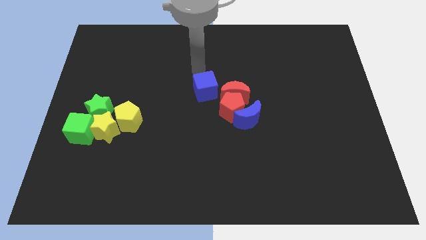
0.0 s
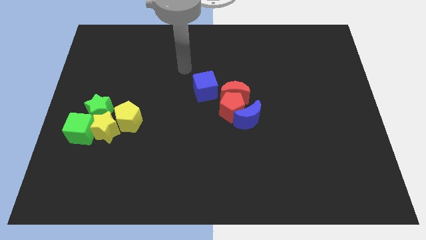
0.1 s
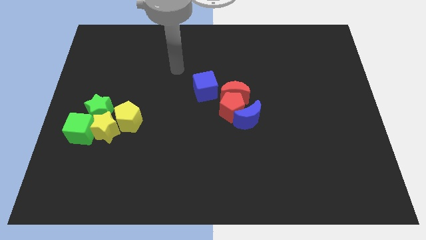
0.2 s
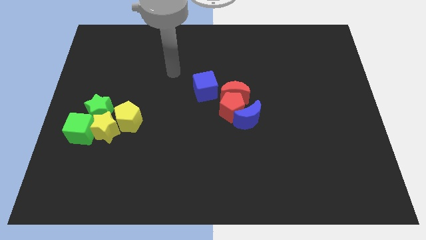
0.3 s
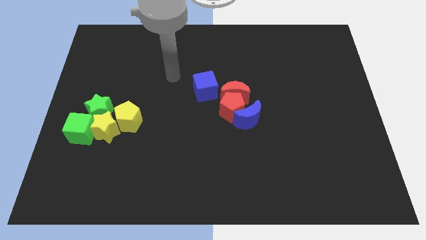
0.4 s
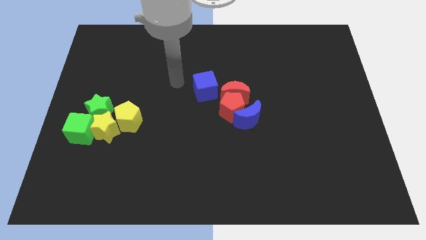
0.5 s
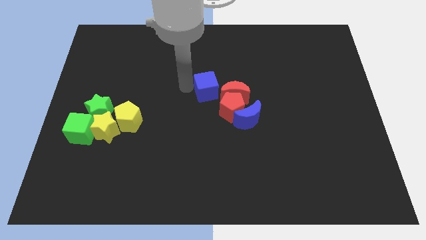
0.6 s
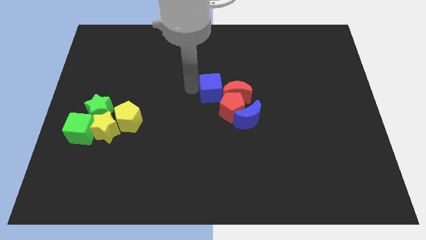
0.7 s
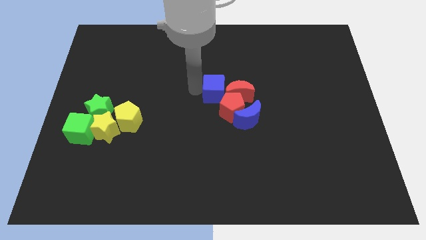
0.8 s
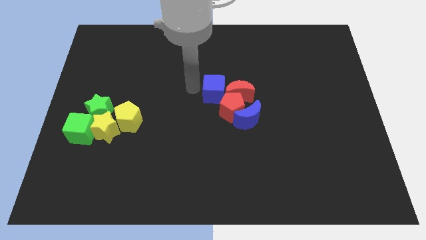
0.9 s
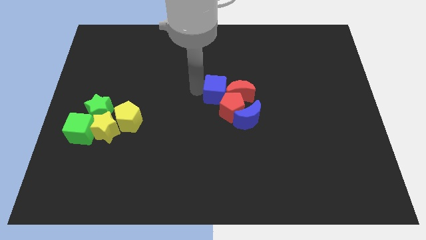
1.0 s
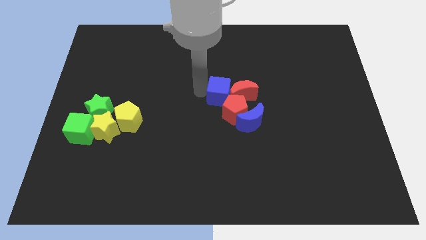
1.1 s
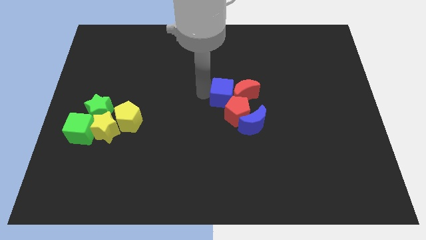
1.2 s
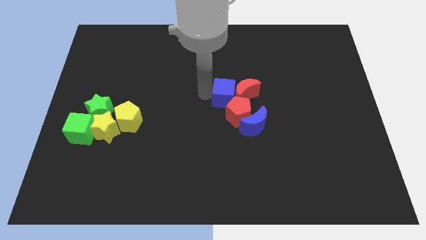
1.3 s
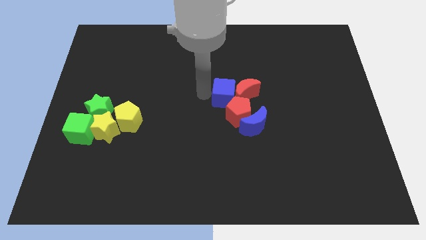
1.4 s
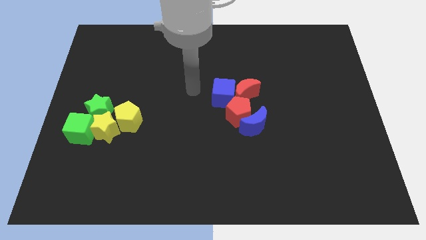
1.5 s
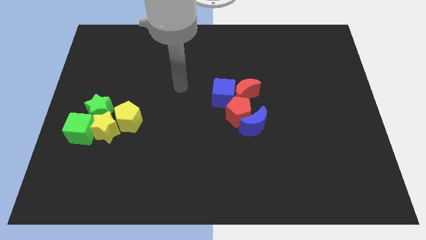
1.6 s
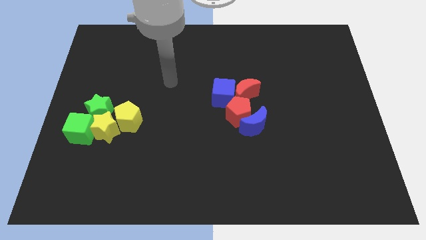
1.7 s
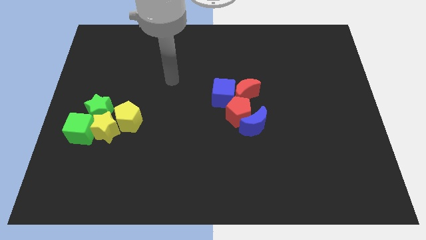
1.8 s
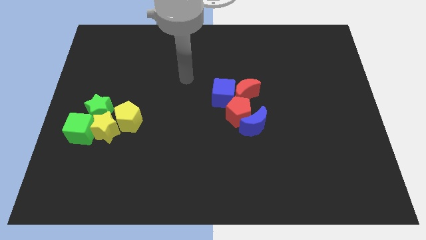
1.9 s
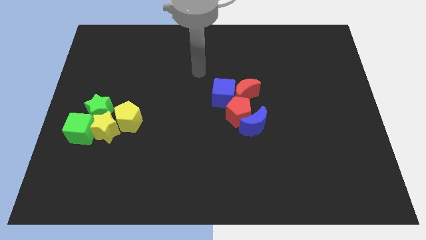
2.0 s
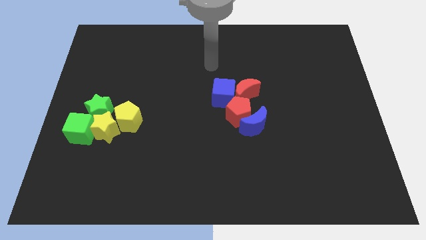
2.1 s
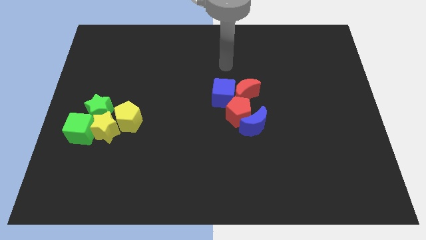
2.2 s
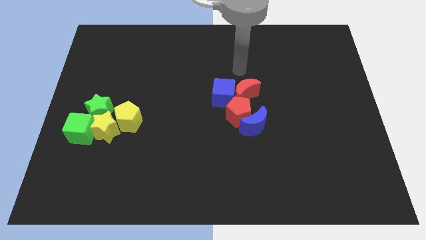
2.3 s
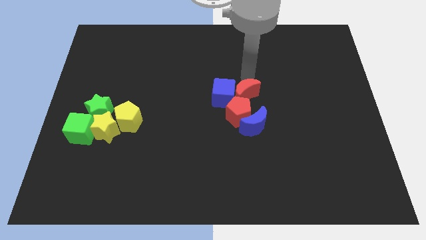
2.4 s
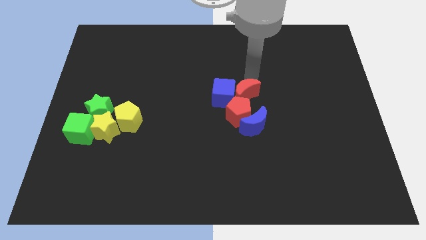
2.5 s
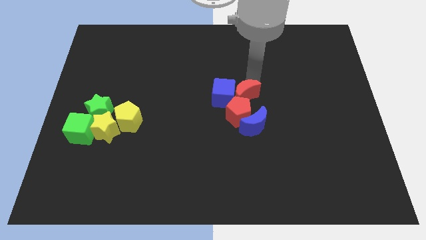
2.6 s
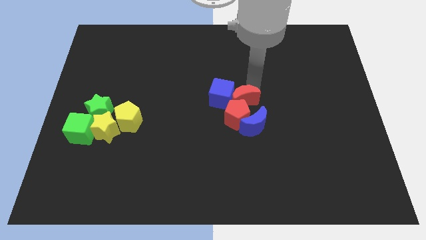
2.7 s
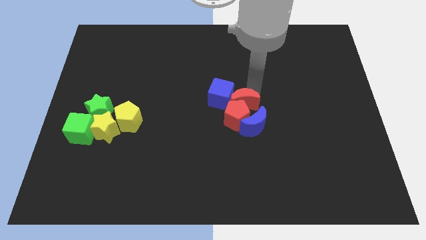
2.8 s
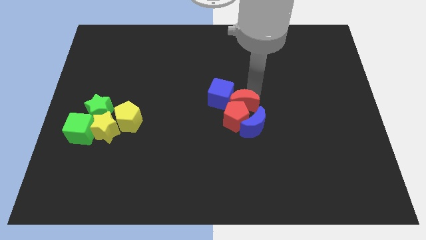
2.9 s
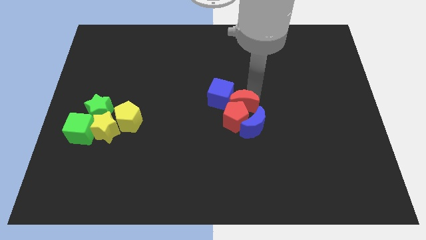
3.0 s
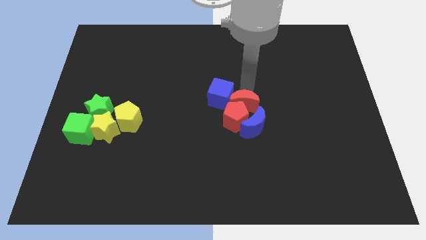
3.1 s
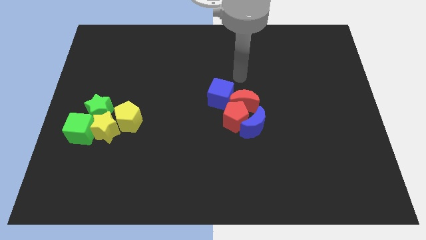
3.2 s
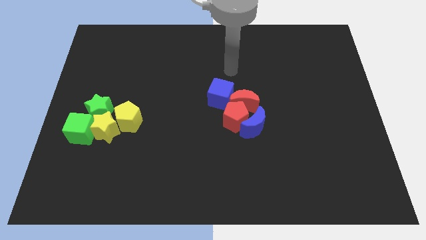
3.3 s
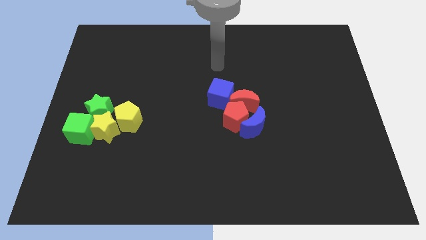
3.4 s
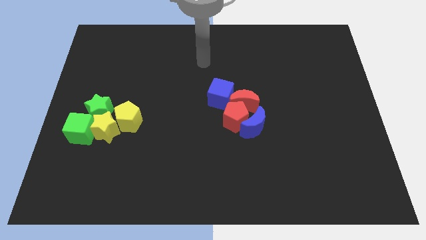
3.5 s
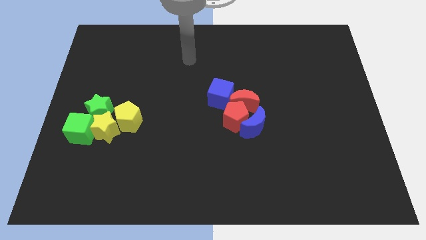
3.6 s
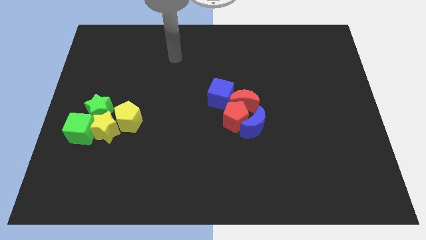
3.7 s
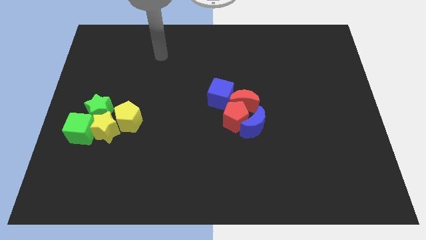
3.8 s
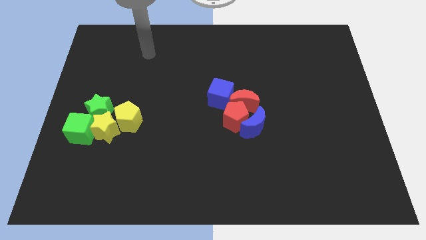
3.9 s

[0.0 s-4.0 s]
push the blue moon into the group of blocks

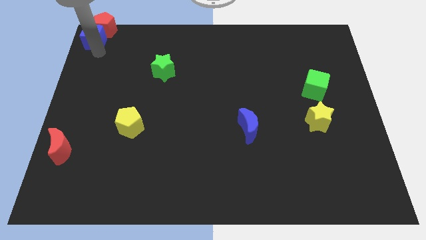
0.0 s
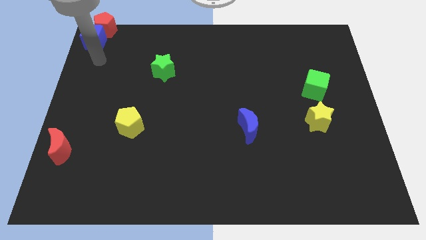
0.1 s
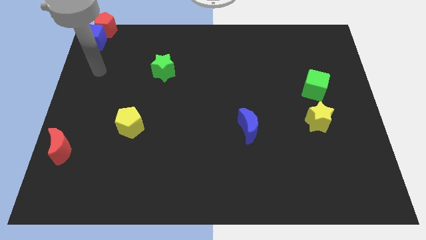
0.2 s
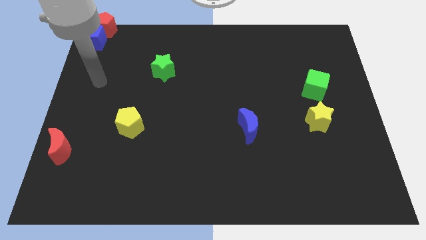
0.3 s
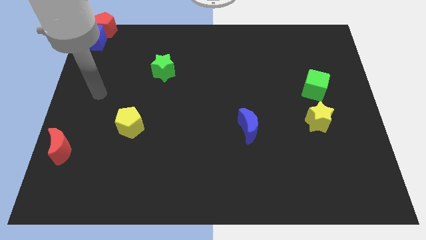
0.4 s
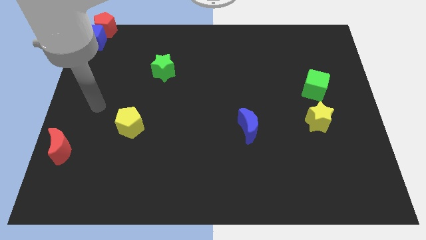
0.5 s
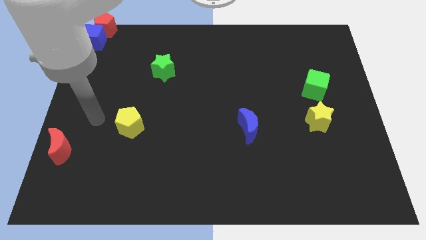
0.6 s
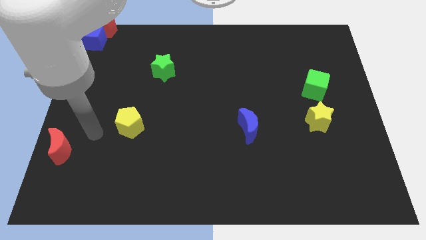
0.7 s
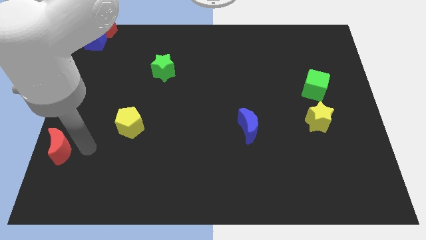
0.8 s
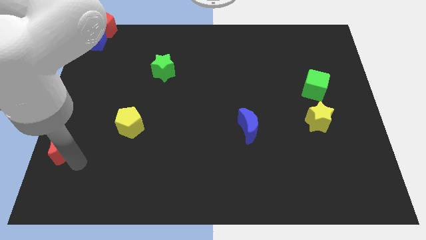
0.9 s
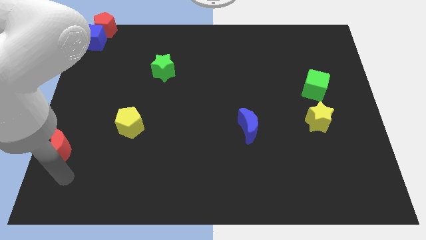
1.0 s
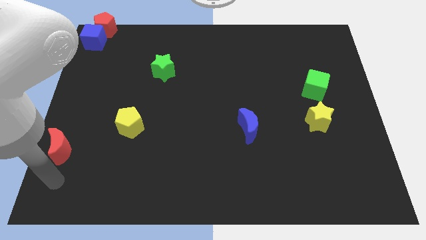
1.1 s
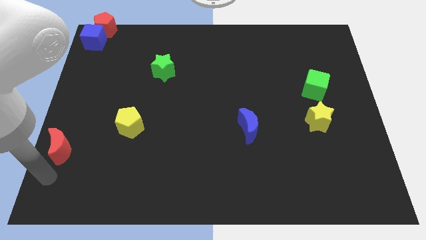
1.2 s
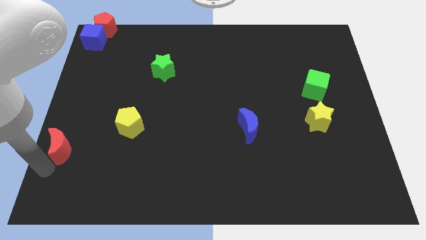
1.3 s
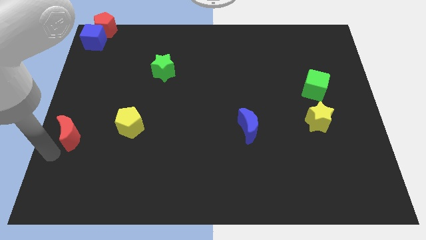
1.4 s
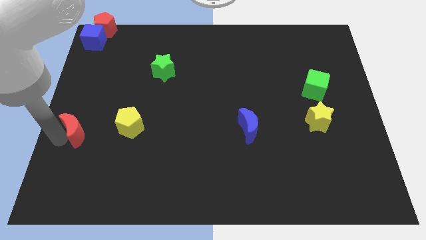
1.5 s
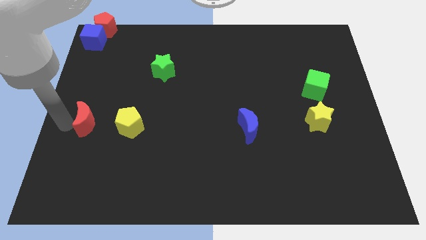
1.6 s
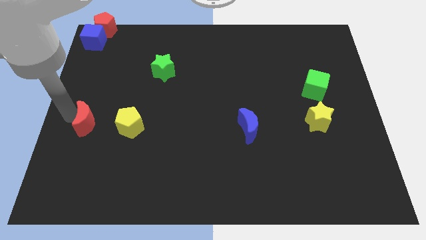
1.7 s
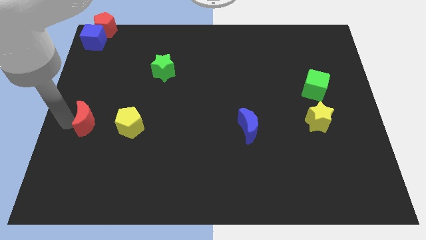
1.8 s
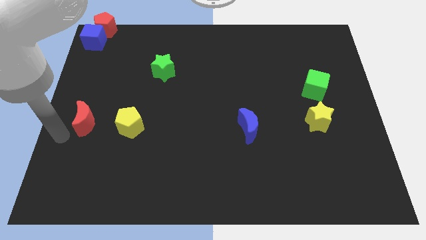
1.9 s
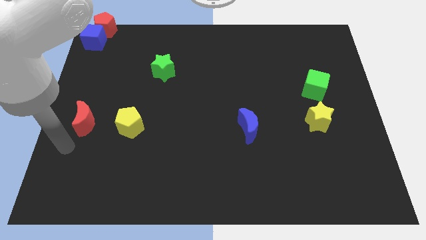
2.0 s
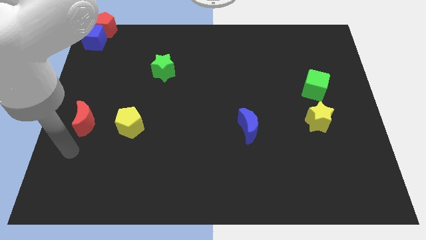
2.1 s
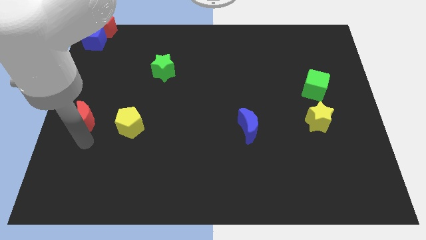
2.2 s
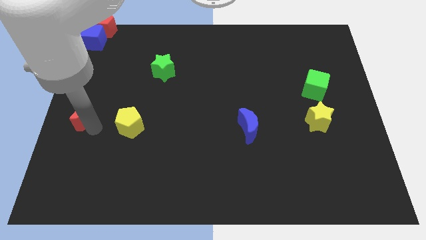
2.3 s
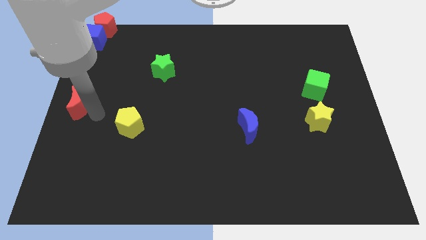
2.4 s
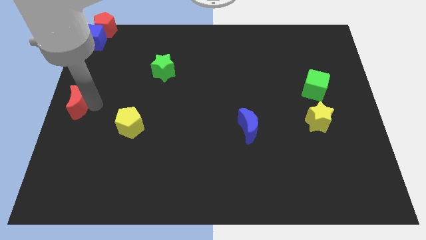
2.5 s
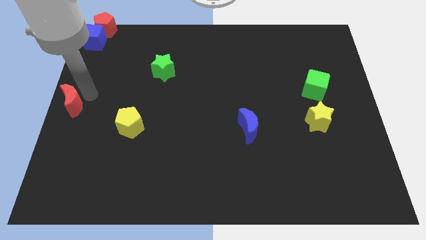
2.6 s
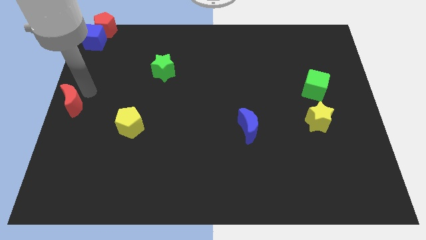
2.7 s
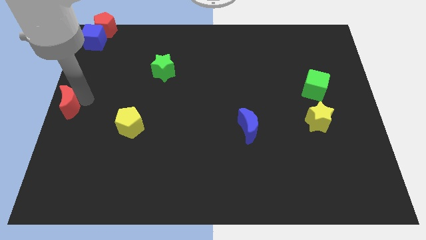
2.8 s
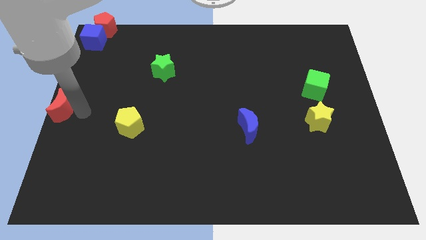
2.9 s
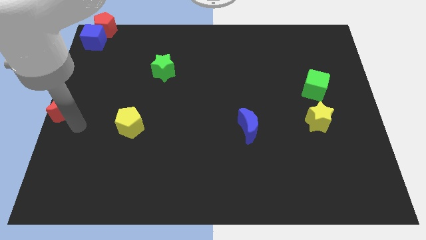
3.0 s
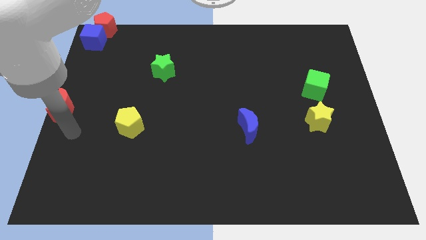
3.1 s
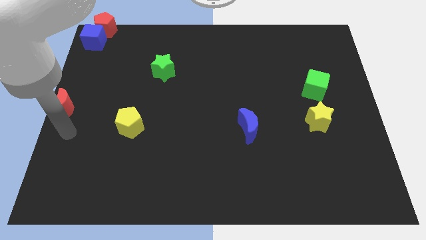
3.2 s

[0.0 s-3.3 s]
place the red moon at the center left of the board

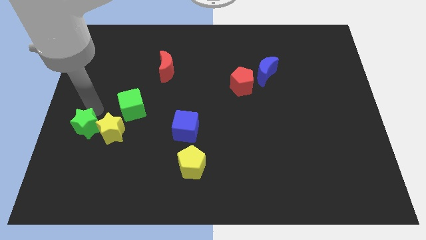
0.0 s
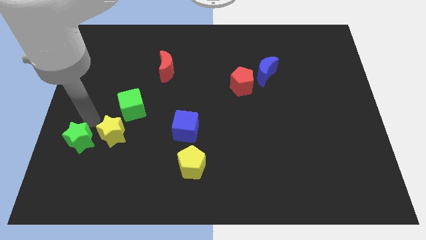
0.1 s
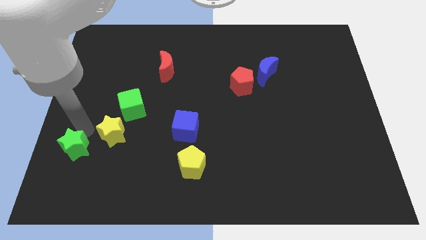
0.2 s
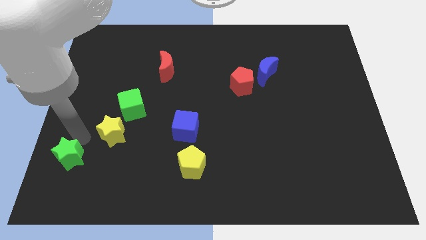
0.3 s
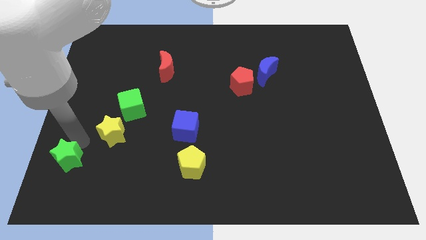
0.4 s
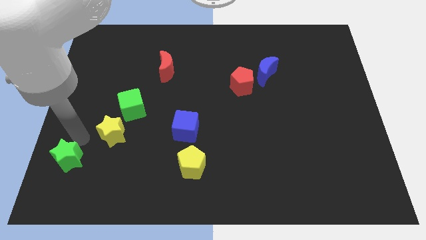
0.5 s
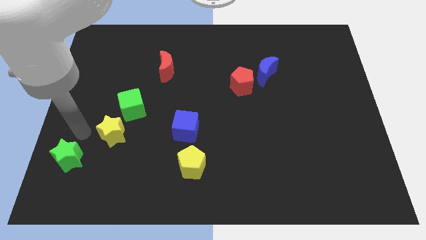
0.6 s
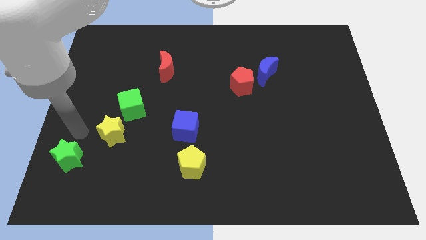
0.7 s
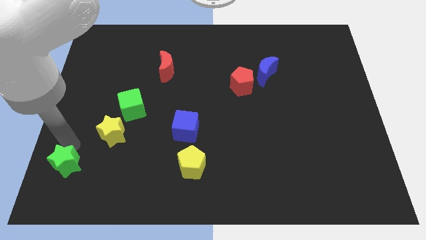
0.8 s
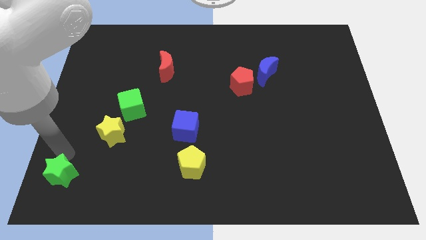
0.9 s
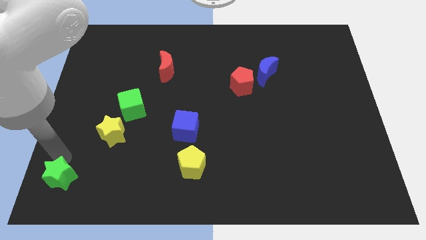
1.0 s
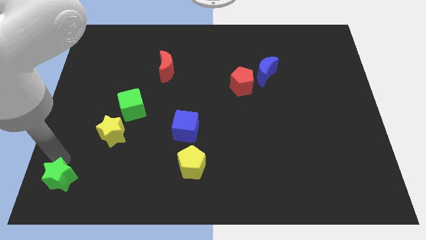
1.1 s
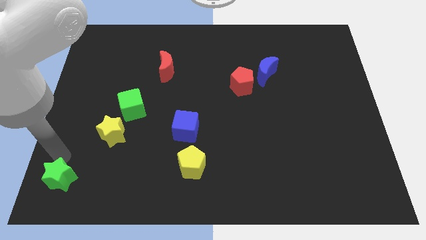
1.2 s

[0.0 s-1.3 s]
move green star to the bottom left of the board

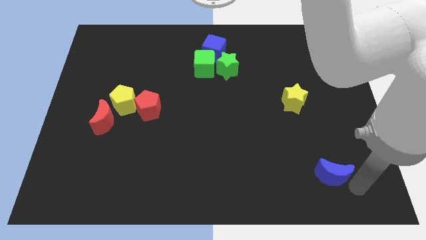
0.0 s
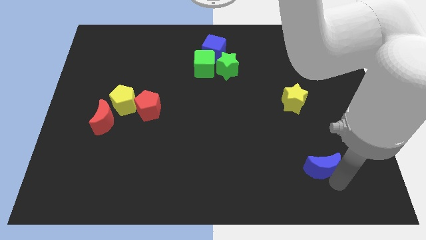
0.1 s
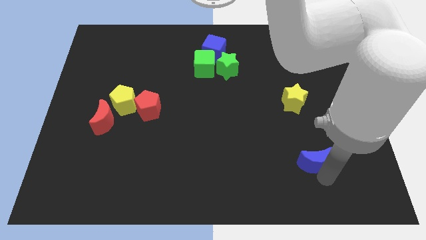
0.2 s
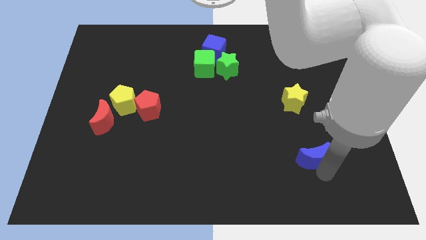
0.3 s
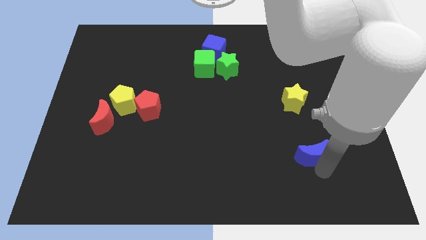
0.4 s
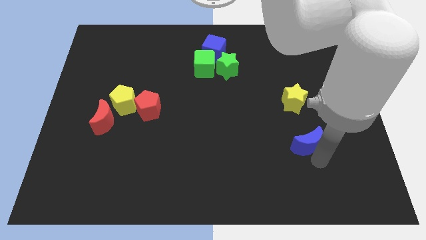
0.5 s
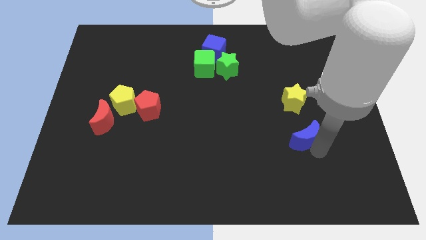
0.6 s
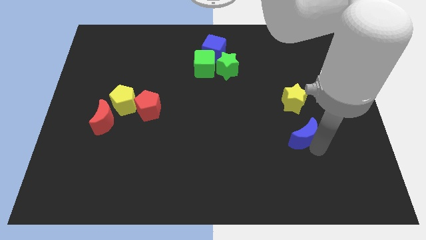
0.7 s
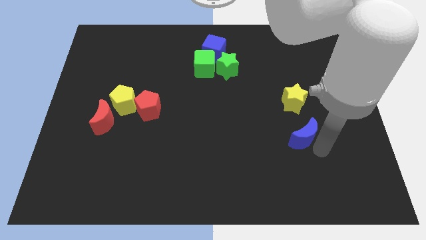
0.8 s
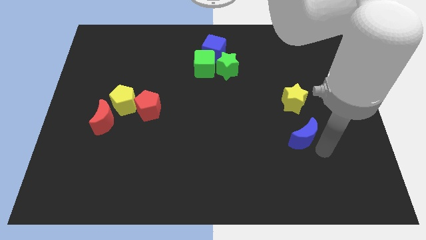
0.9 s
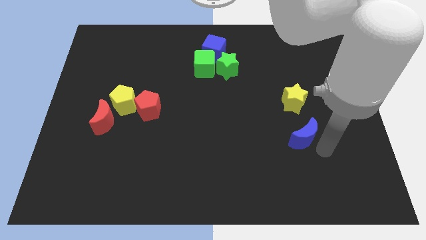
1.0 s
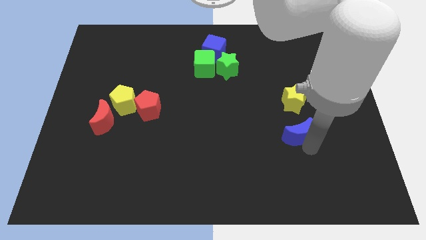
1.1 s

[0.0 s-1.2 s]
push the blue crescent towards the yellow star
